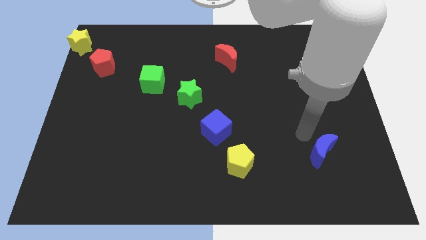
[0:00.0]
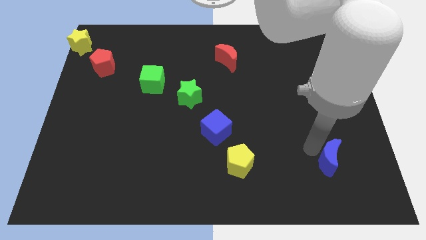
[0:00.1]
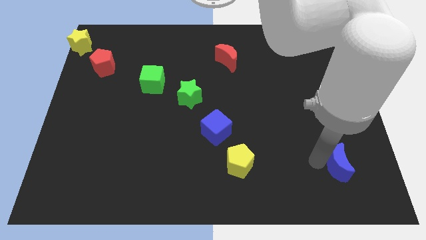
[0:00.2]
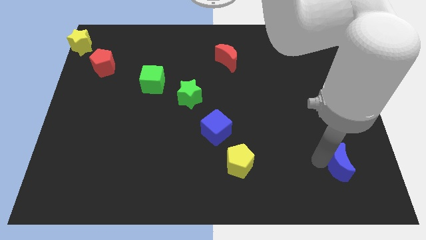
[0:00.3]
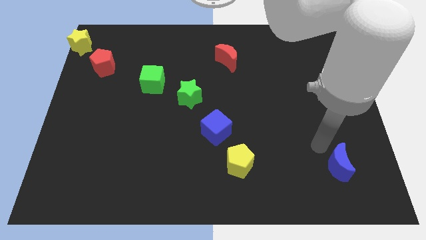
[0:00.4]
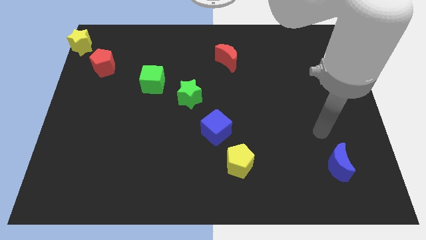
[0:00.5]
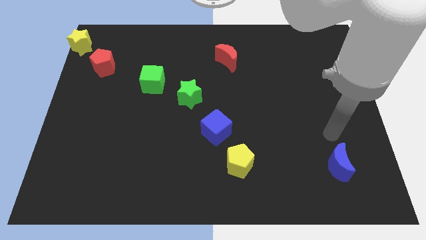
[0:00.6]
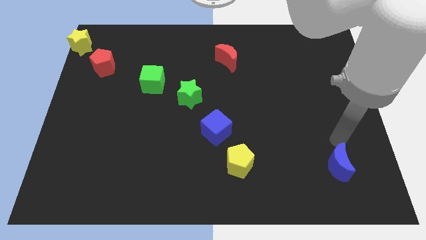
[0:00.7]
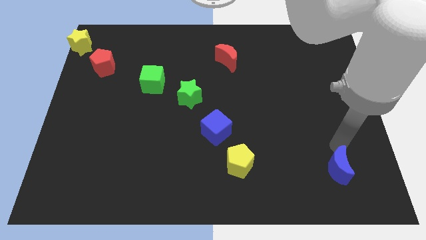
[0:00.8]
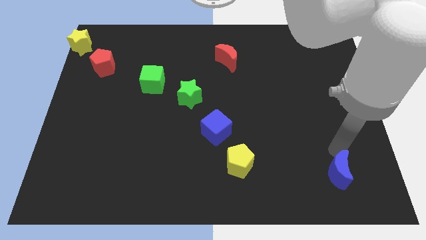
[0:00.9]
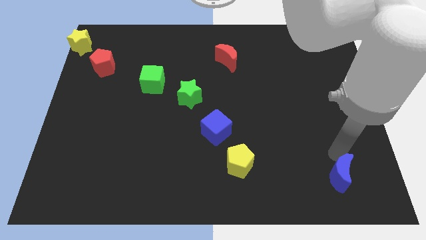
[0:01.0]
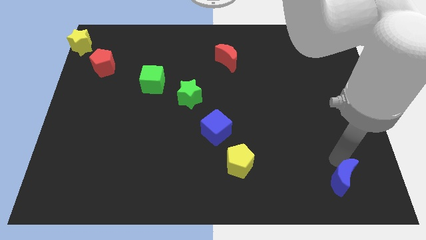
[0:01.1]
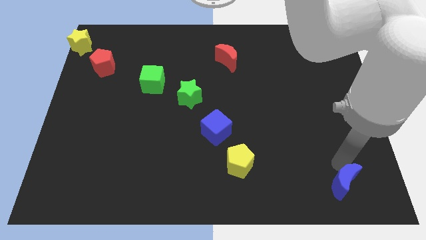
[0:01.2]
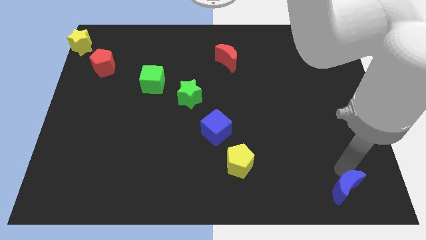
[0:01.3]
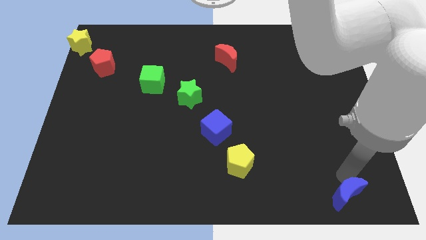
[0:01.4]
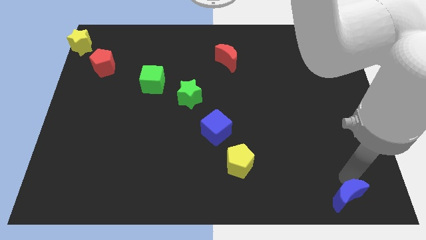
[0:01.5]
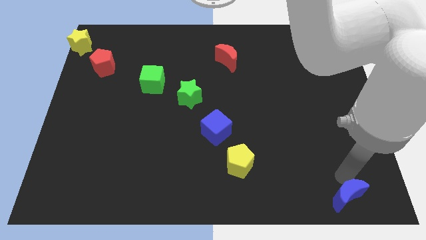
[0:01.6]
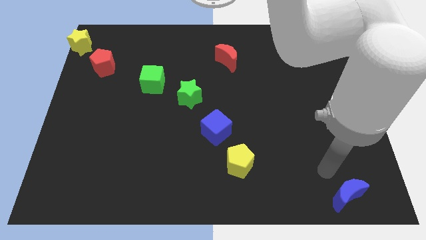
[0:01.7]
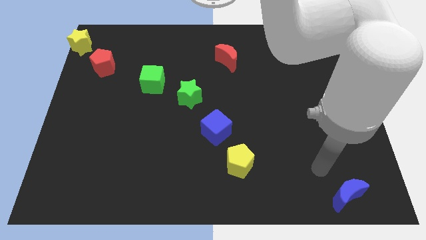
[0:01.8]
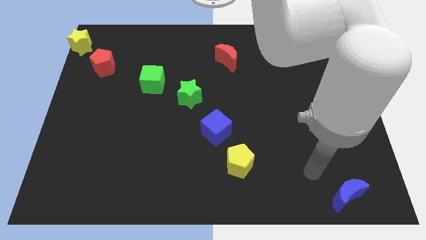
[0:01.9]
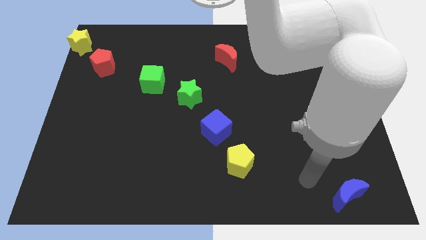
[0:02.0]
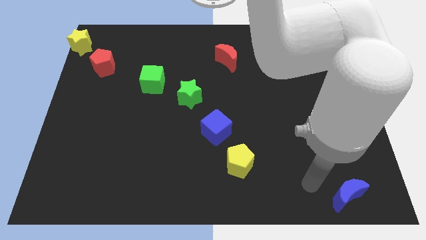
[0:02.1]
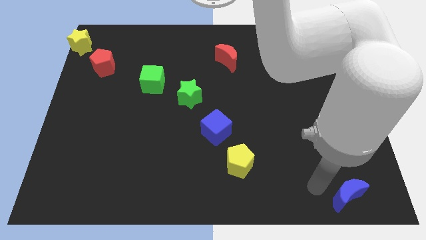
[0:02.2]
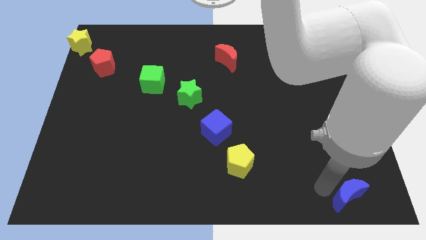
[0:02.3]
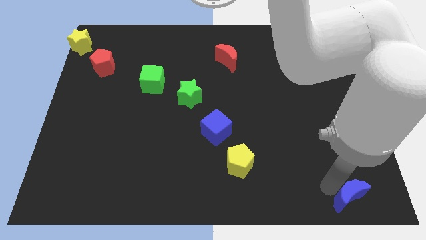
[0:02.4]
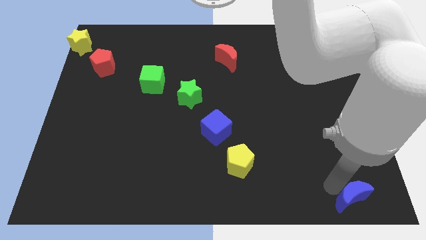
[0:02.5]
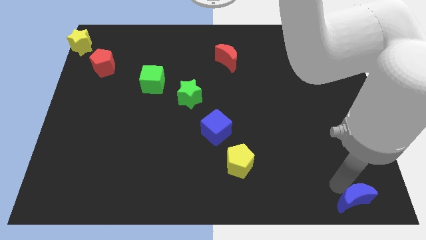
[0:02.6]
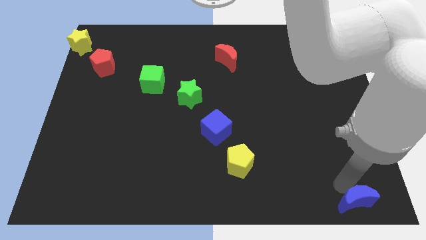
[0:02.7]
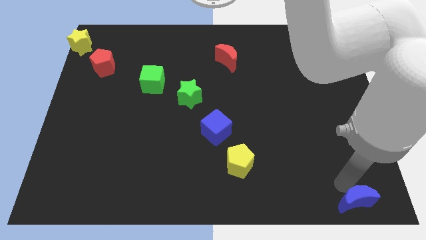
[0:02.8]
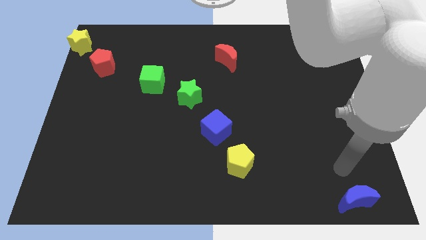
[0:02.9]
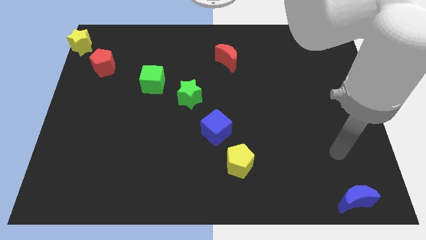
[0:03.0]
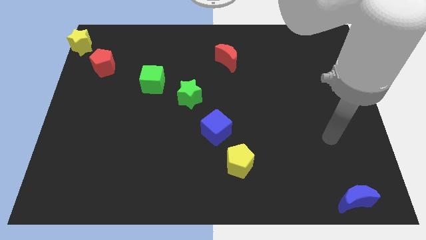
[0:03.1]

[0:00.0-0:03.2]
drag the blue crescent towards the bottom right

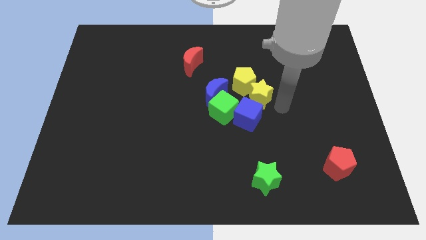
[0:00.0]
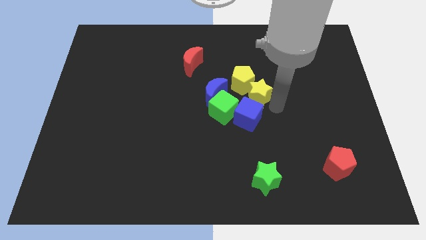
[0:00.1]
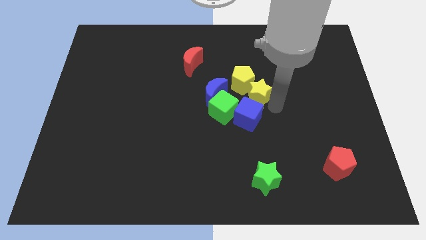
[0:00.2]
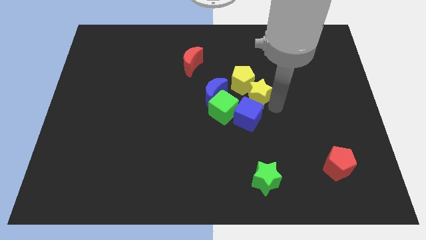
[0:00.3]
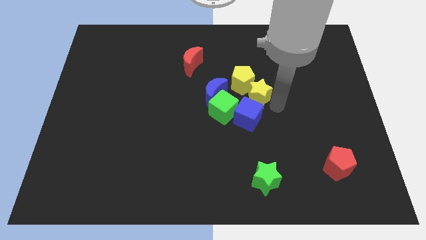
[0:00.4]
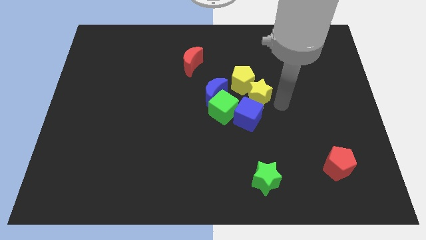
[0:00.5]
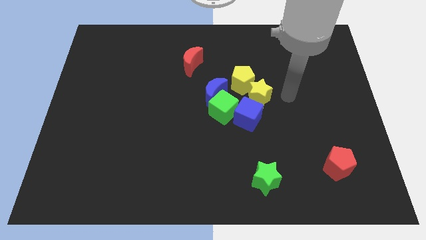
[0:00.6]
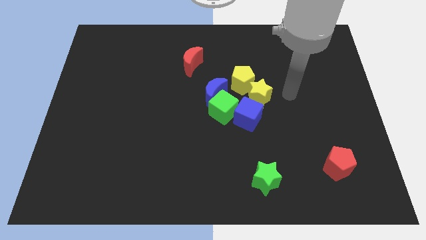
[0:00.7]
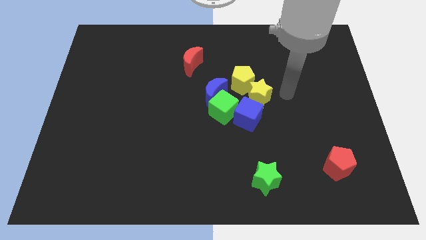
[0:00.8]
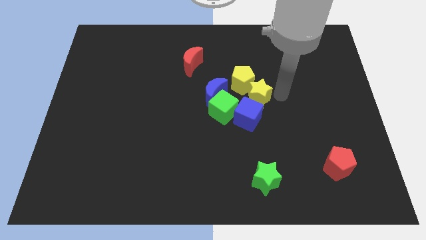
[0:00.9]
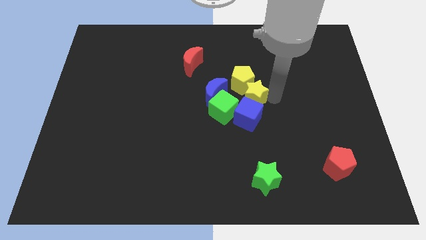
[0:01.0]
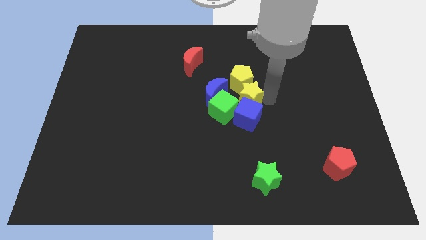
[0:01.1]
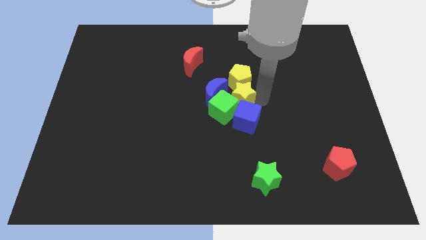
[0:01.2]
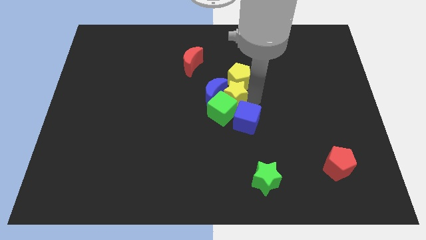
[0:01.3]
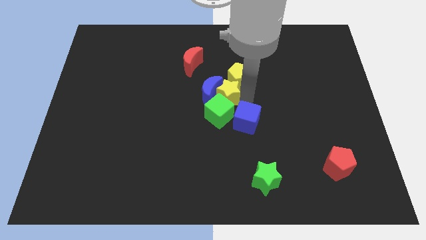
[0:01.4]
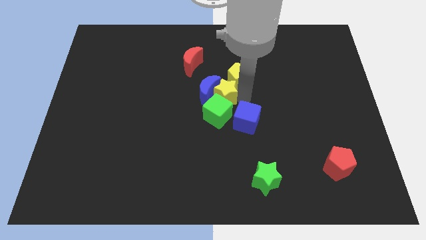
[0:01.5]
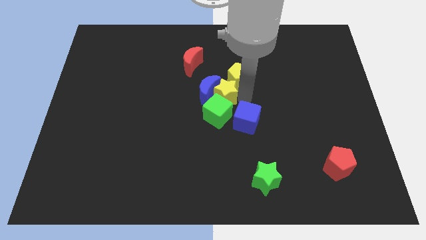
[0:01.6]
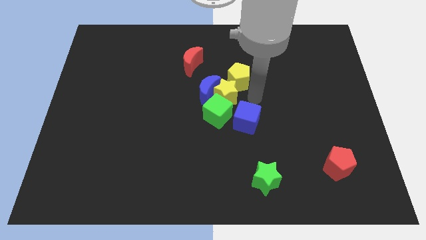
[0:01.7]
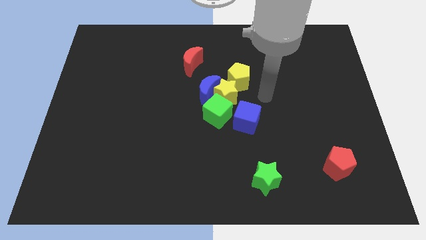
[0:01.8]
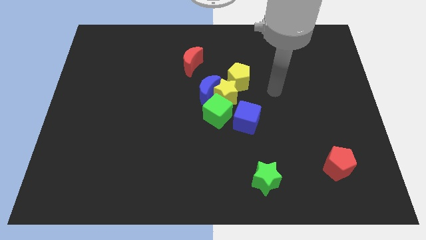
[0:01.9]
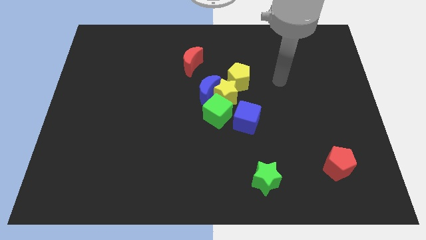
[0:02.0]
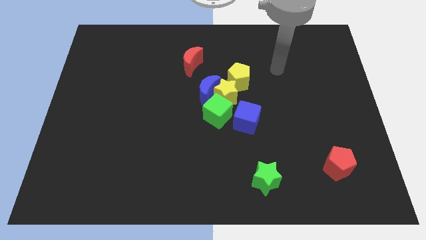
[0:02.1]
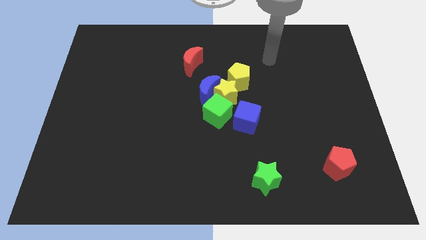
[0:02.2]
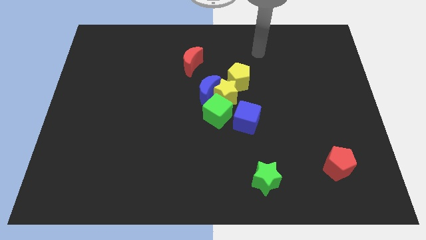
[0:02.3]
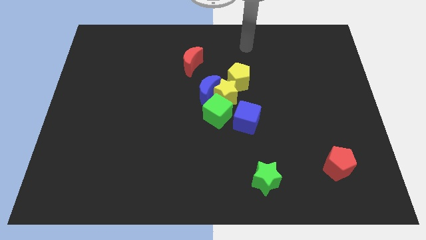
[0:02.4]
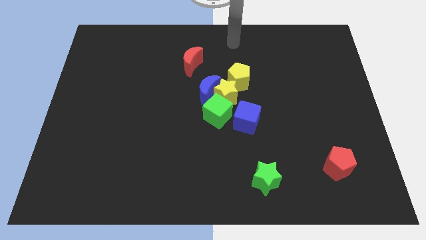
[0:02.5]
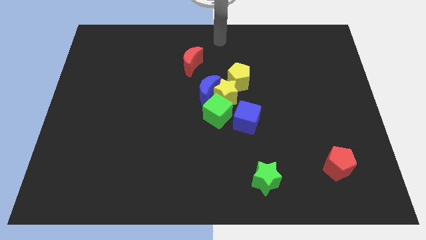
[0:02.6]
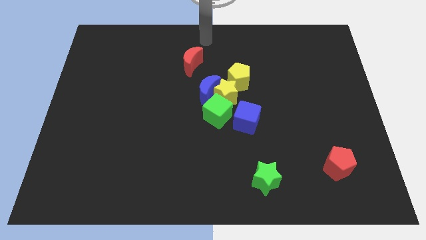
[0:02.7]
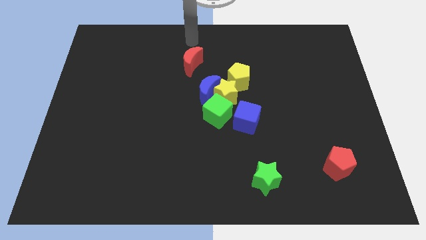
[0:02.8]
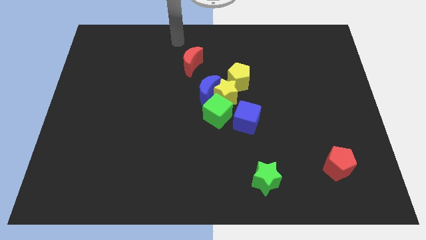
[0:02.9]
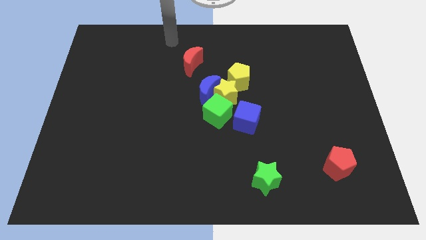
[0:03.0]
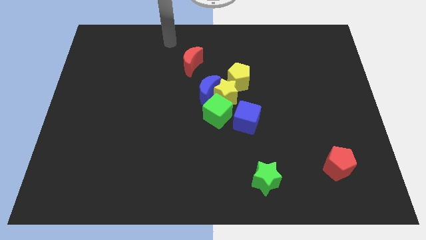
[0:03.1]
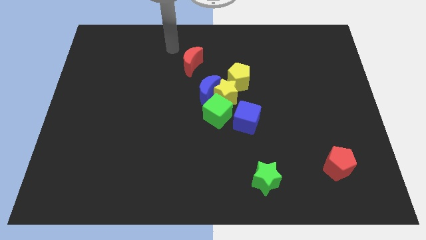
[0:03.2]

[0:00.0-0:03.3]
place the yellow star in between green cube and yellow pentagon

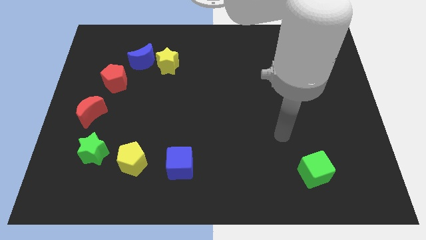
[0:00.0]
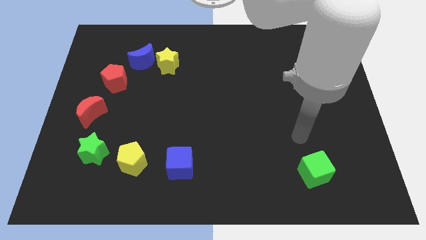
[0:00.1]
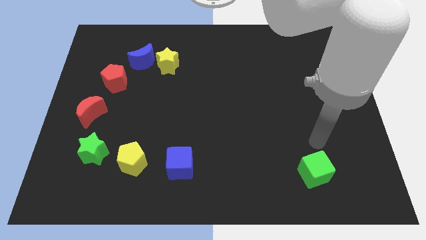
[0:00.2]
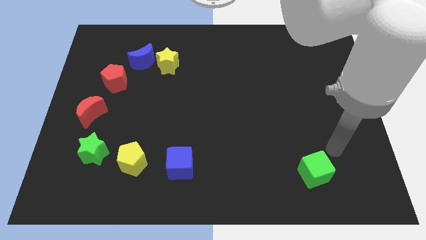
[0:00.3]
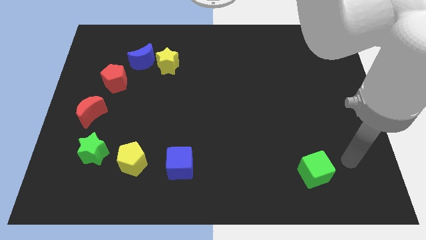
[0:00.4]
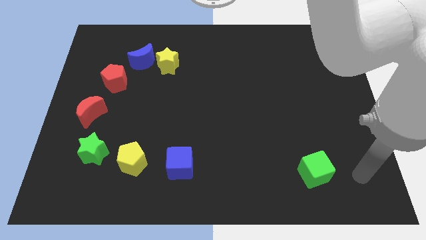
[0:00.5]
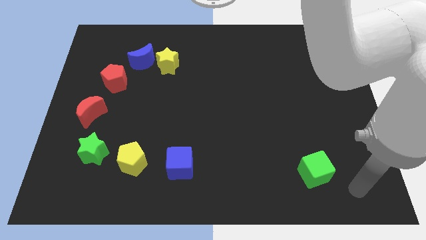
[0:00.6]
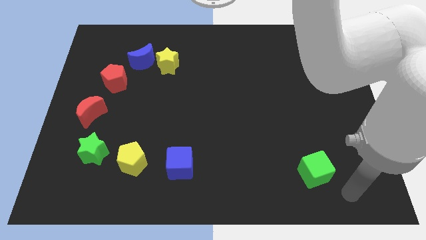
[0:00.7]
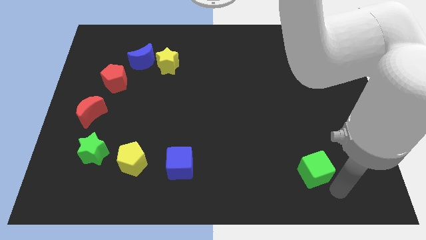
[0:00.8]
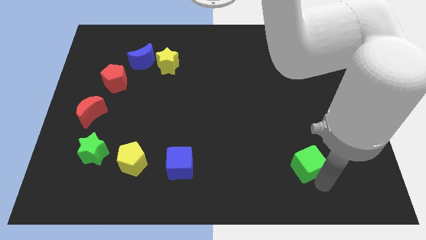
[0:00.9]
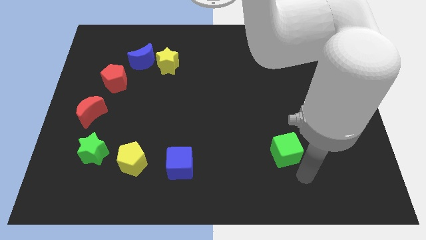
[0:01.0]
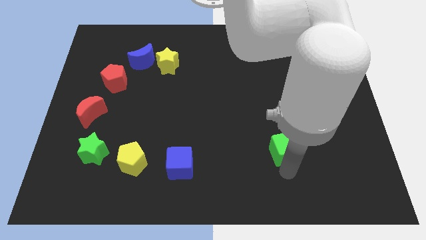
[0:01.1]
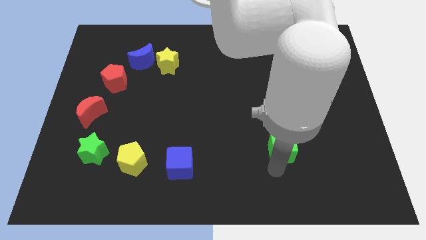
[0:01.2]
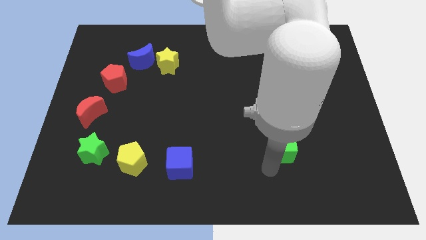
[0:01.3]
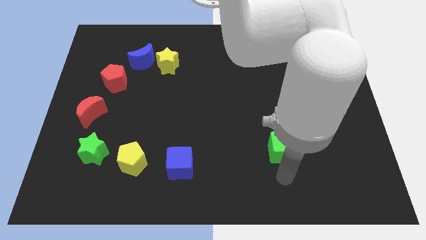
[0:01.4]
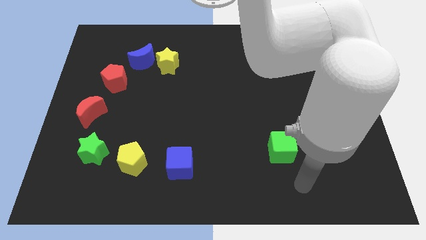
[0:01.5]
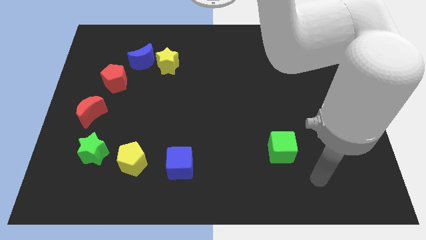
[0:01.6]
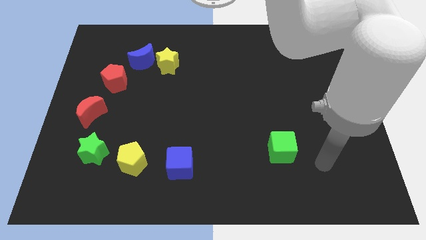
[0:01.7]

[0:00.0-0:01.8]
slightly push the green cube towards the center of the board

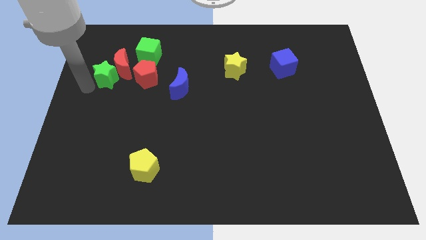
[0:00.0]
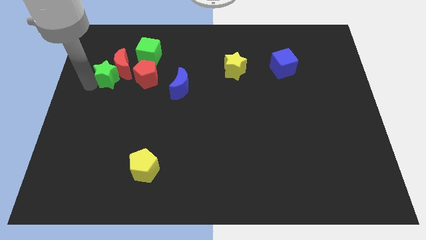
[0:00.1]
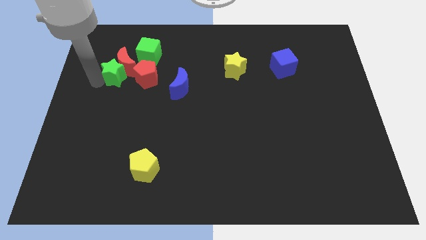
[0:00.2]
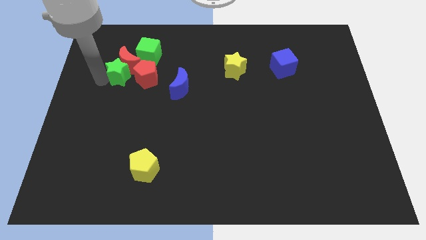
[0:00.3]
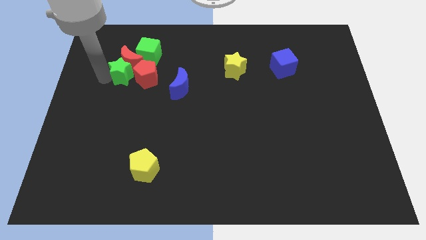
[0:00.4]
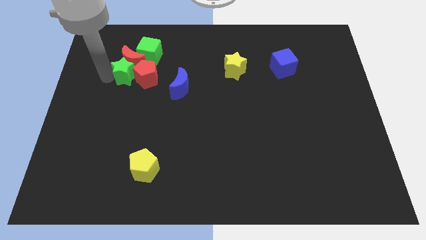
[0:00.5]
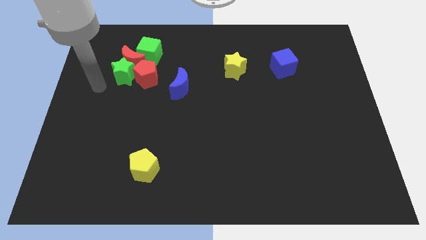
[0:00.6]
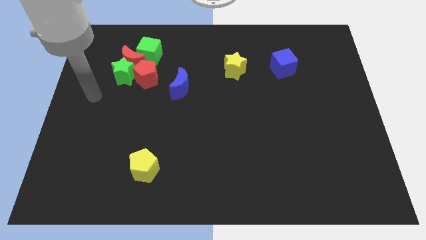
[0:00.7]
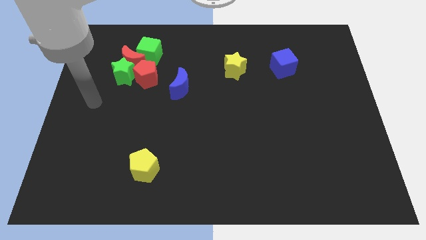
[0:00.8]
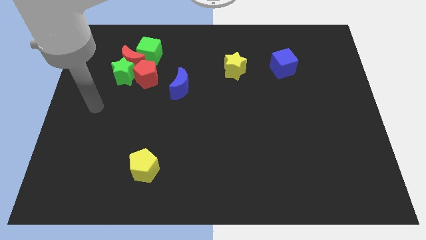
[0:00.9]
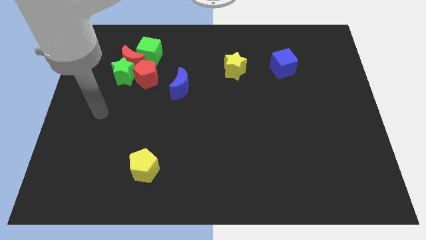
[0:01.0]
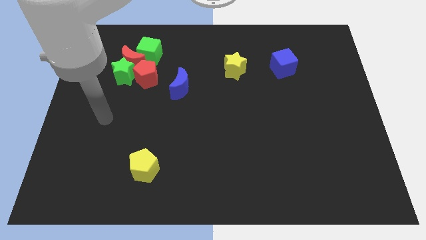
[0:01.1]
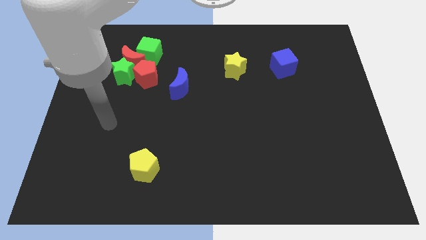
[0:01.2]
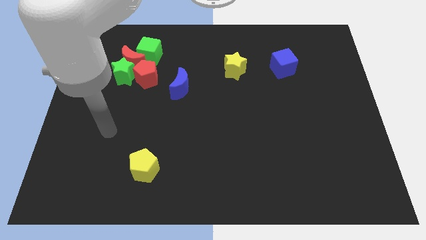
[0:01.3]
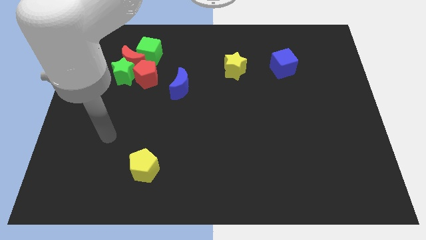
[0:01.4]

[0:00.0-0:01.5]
move the green star along with red crescent into the green cube
